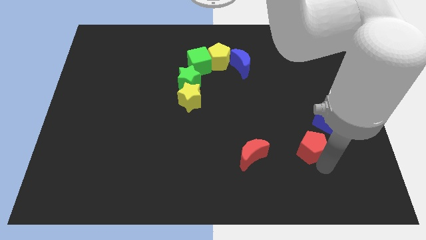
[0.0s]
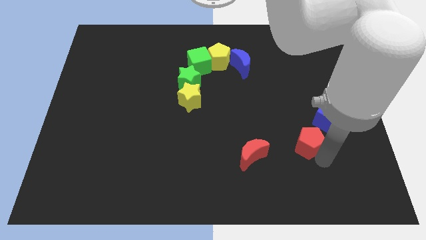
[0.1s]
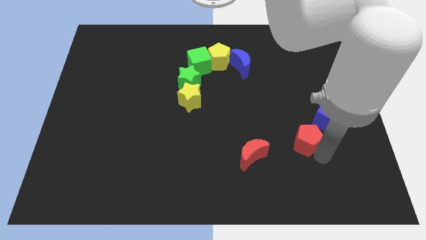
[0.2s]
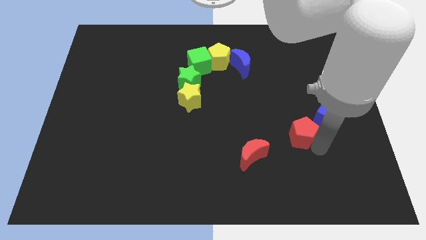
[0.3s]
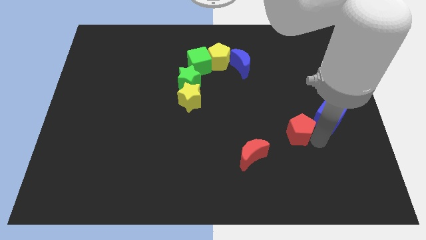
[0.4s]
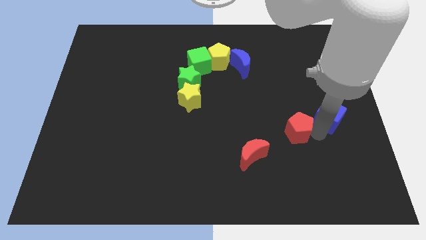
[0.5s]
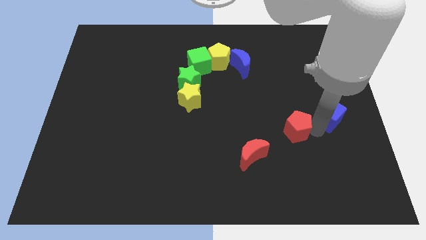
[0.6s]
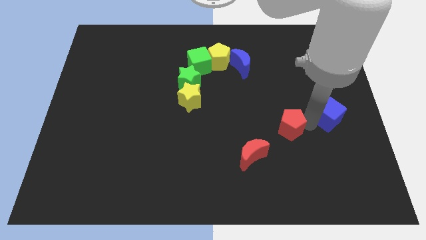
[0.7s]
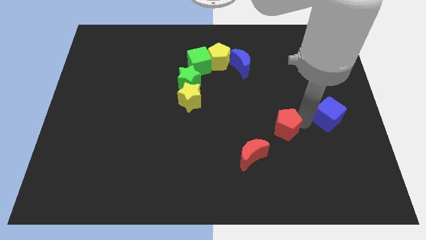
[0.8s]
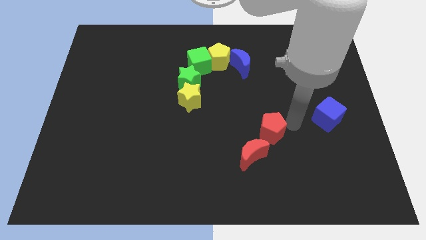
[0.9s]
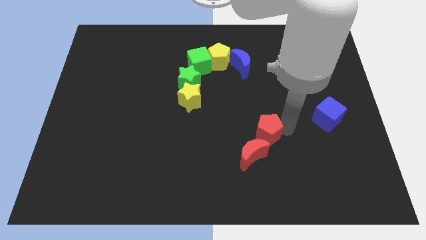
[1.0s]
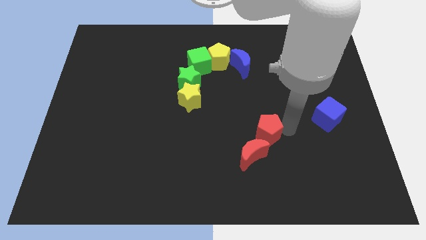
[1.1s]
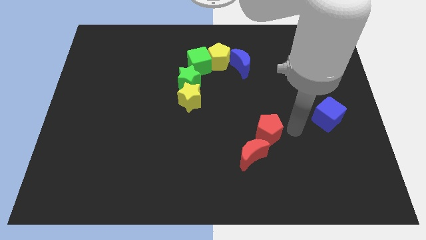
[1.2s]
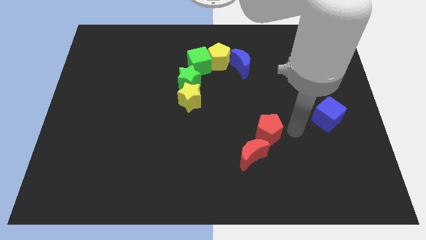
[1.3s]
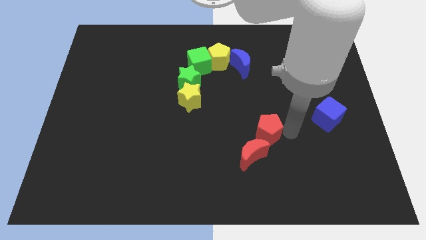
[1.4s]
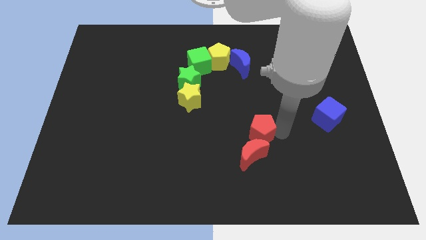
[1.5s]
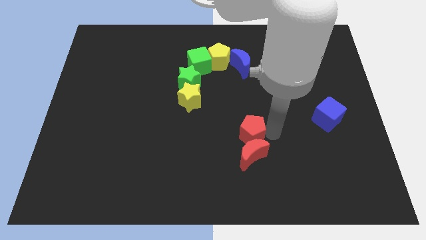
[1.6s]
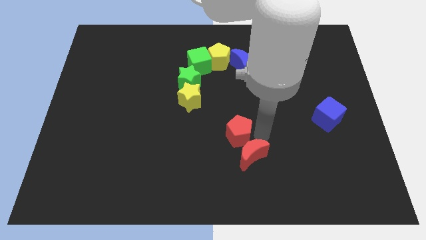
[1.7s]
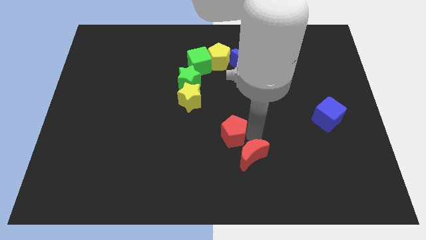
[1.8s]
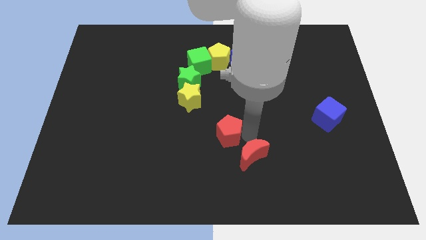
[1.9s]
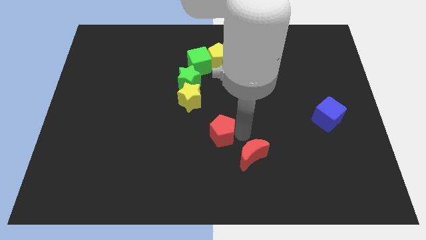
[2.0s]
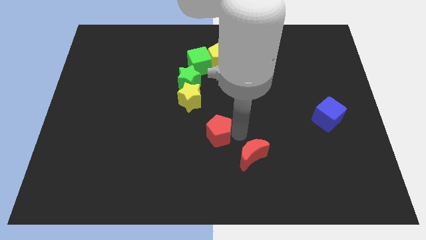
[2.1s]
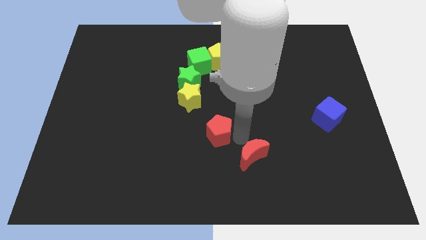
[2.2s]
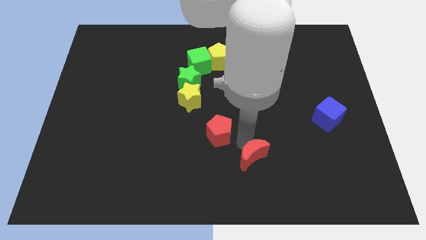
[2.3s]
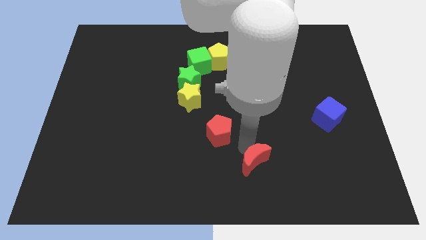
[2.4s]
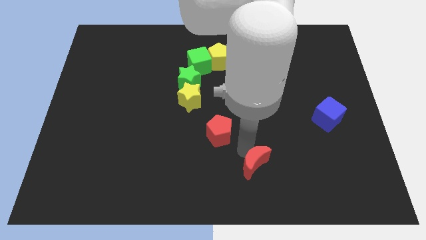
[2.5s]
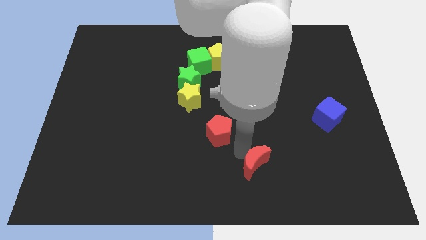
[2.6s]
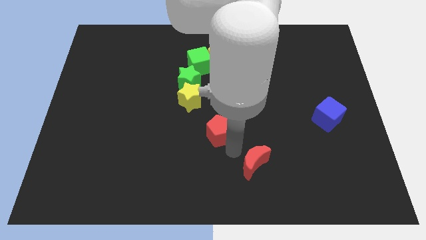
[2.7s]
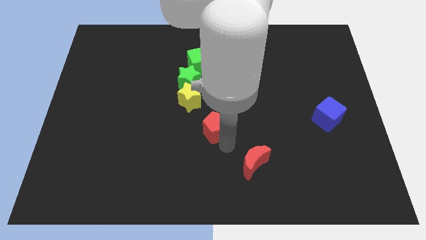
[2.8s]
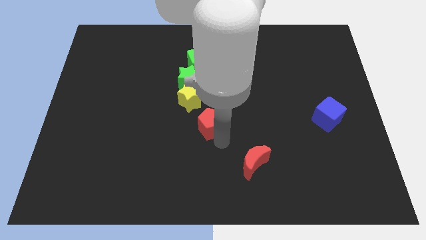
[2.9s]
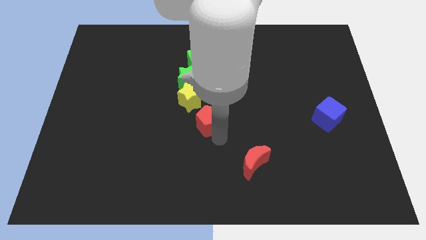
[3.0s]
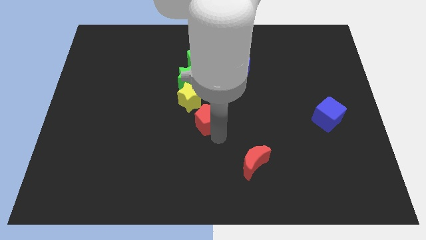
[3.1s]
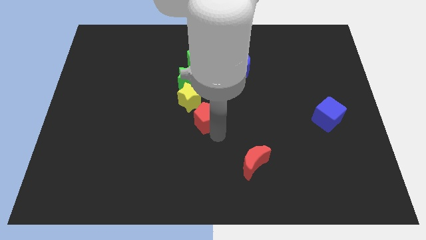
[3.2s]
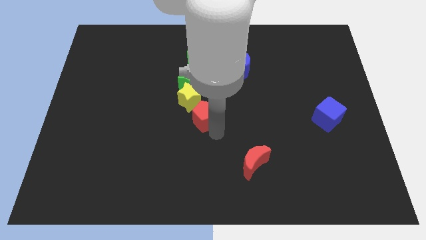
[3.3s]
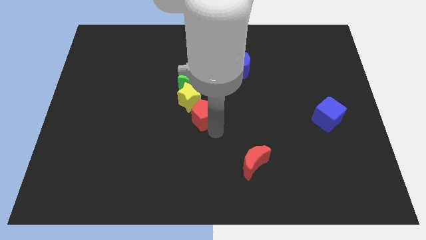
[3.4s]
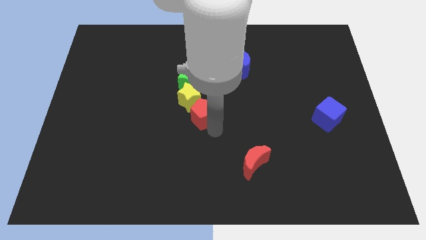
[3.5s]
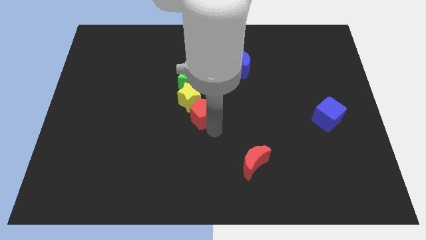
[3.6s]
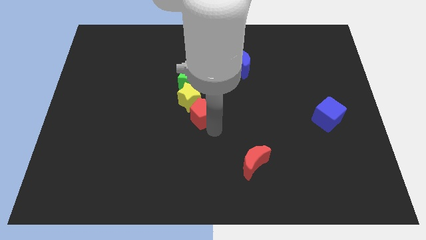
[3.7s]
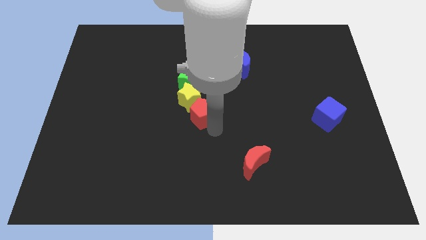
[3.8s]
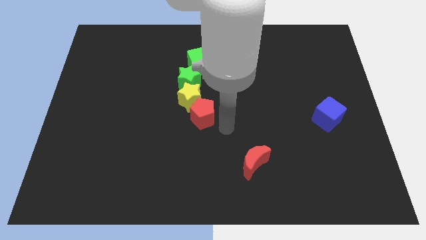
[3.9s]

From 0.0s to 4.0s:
push the red pentagon to the bottom of the yellow star

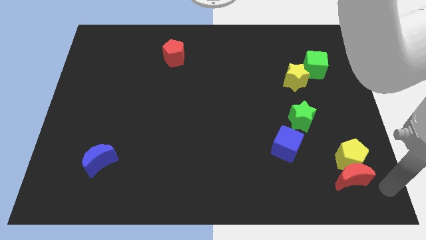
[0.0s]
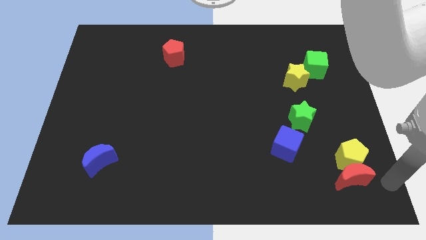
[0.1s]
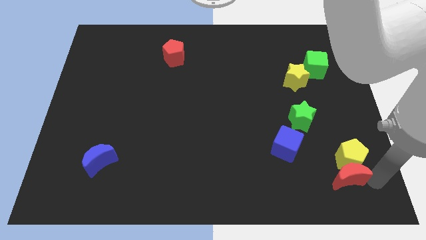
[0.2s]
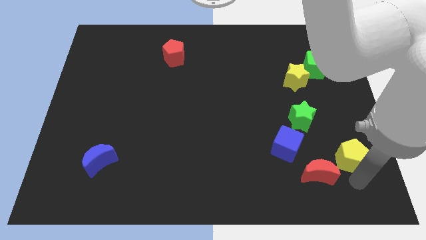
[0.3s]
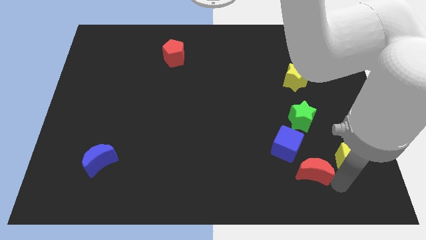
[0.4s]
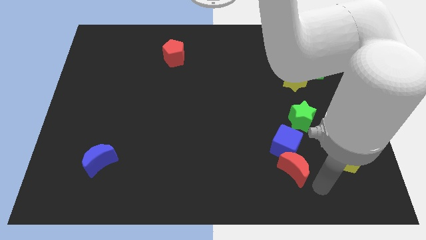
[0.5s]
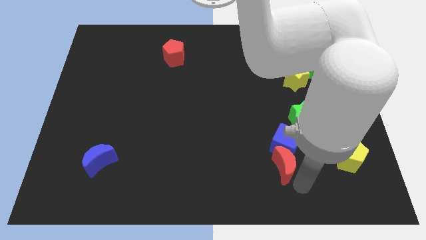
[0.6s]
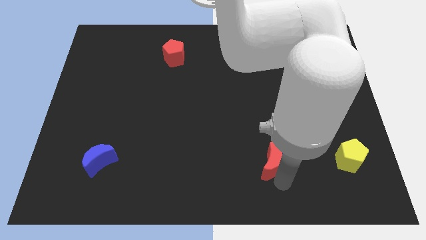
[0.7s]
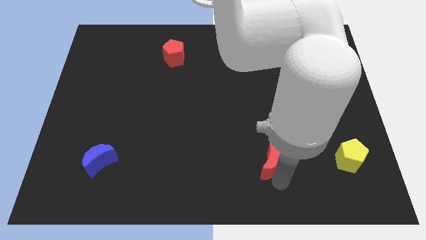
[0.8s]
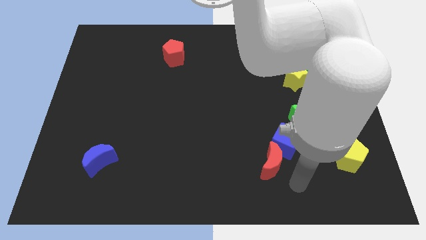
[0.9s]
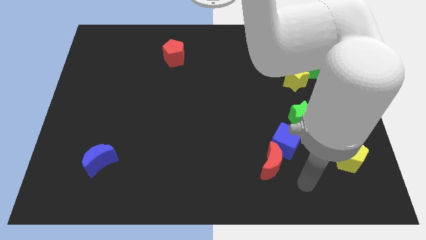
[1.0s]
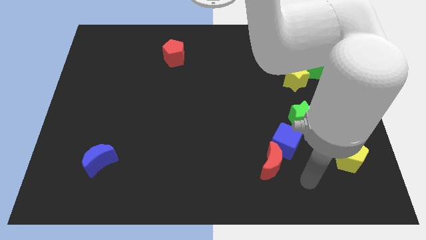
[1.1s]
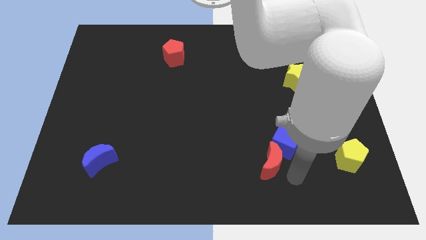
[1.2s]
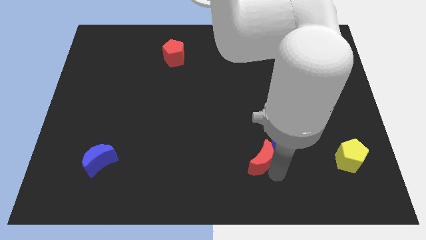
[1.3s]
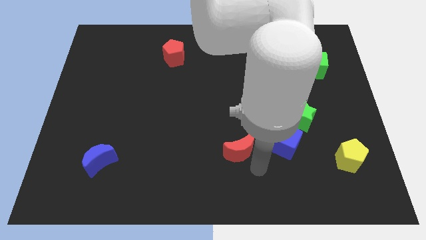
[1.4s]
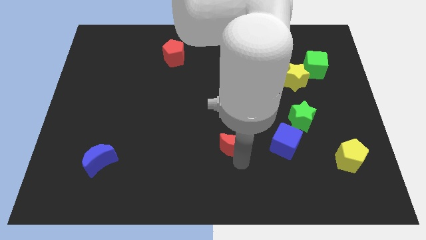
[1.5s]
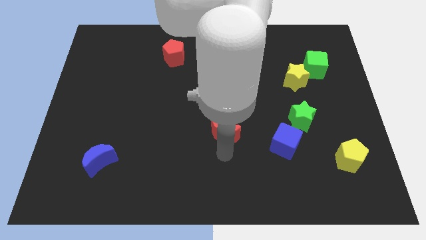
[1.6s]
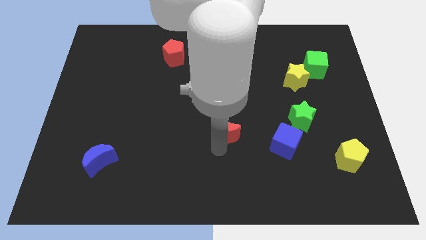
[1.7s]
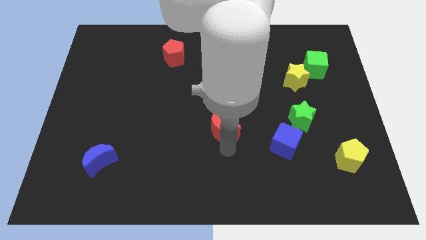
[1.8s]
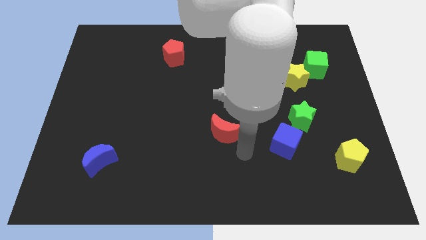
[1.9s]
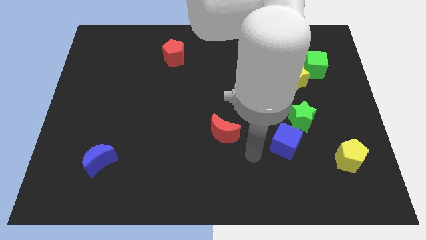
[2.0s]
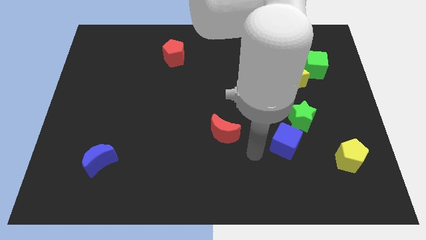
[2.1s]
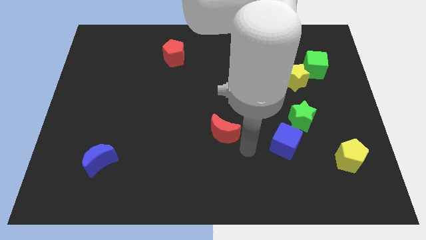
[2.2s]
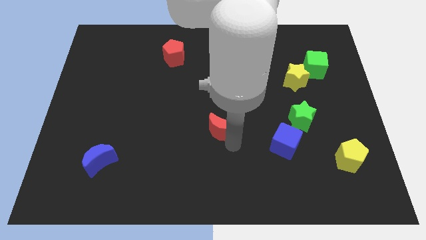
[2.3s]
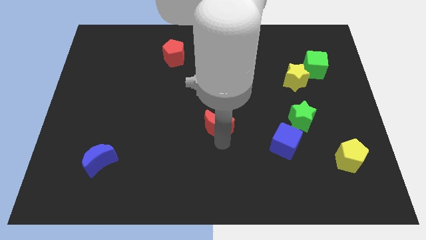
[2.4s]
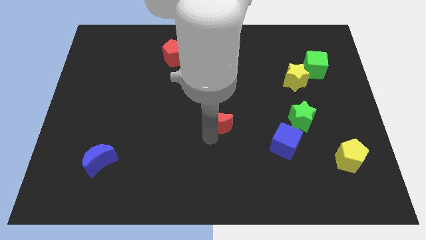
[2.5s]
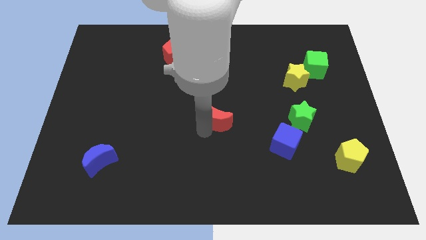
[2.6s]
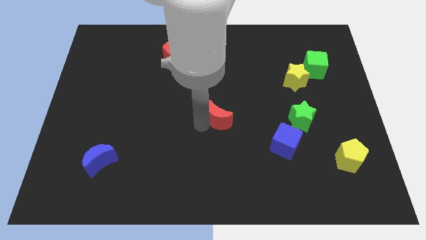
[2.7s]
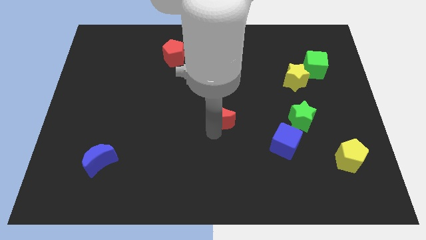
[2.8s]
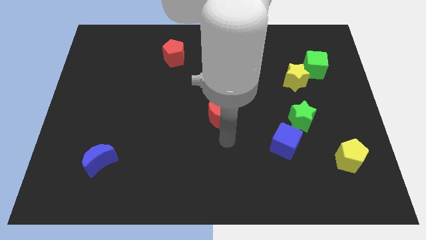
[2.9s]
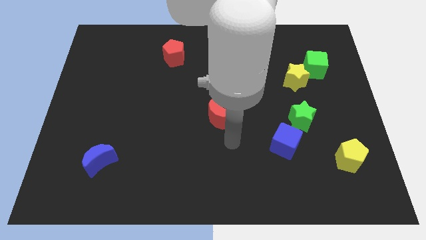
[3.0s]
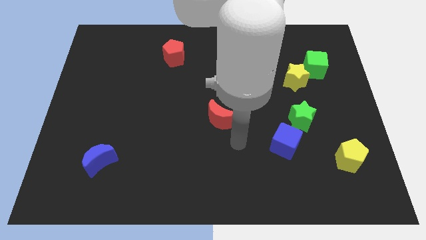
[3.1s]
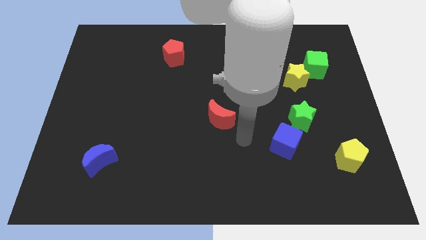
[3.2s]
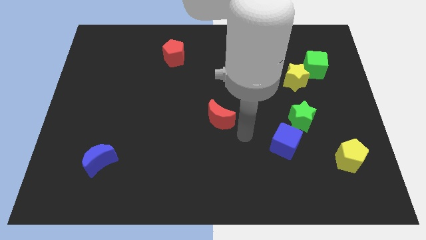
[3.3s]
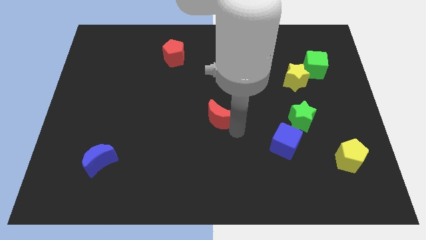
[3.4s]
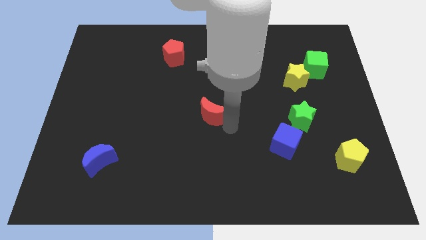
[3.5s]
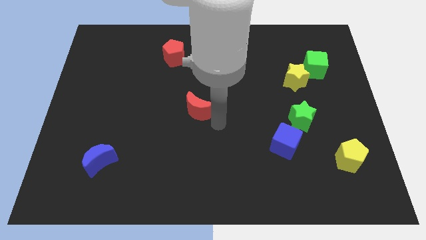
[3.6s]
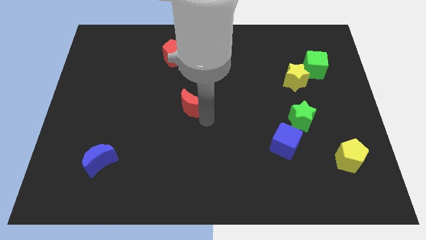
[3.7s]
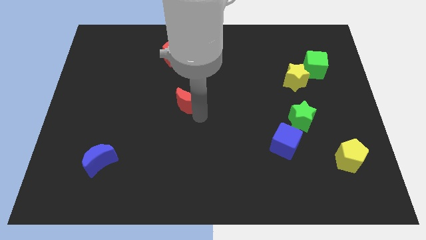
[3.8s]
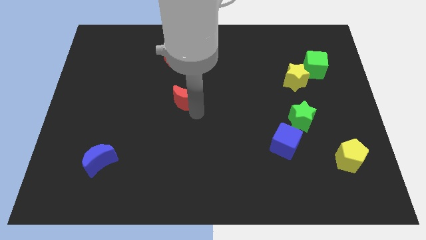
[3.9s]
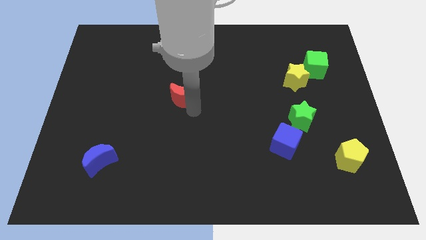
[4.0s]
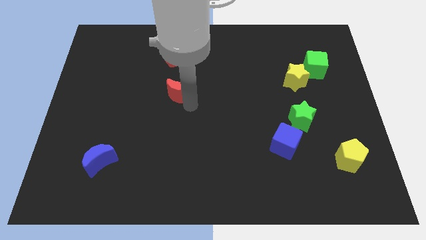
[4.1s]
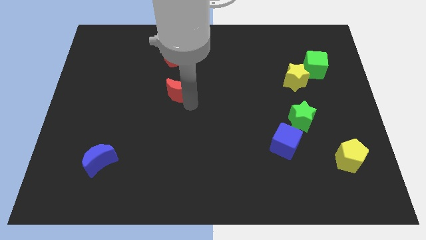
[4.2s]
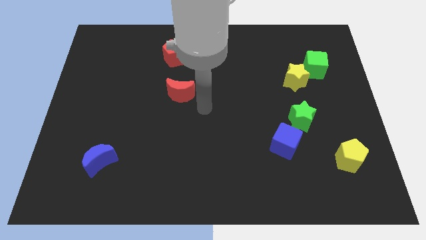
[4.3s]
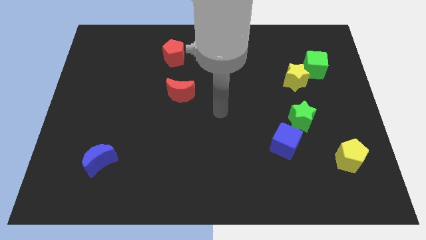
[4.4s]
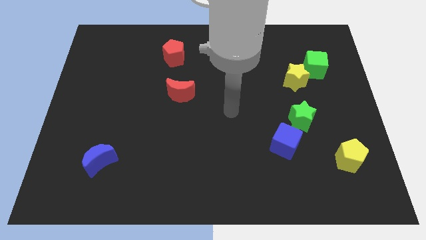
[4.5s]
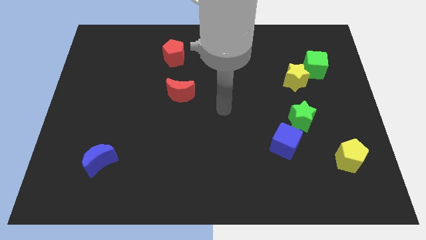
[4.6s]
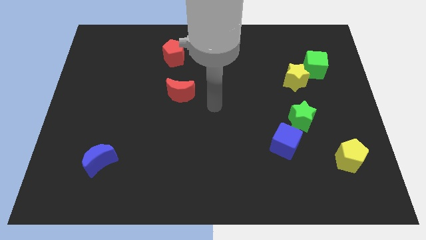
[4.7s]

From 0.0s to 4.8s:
push the red moon below the red pentagon

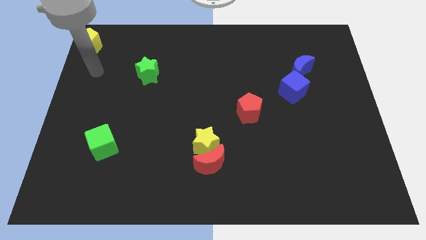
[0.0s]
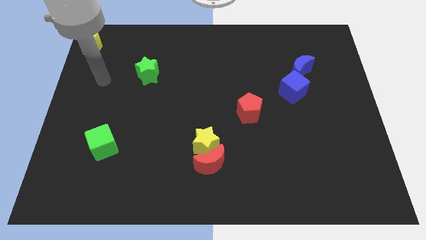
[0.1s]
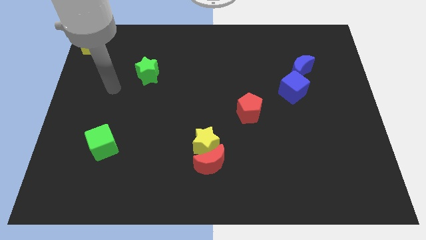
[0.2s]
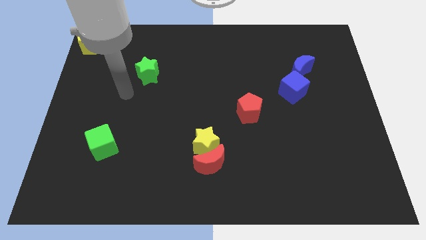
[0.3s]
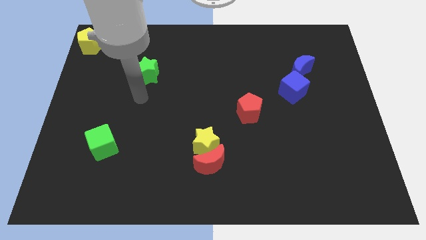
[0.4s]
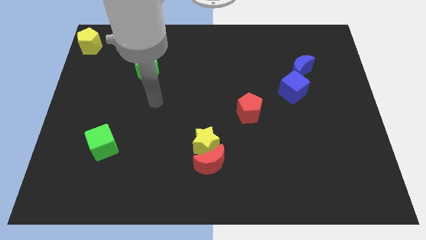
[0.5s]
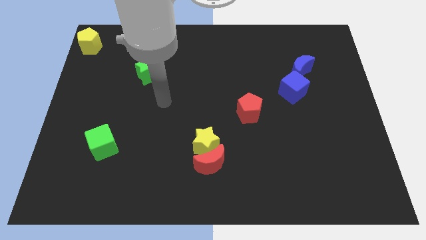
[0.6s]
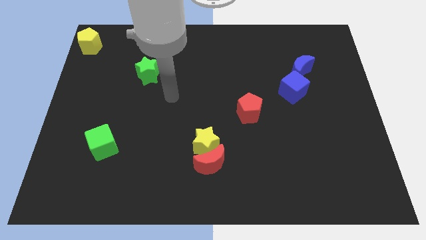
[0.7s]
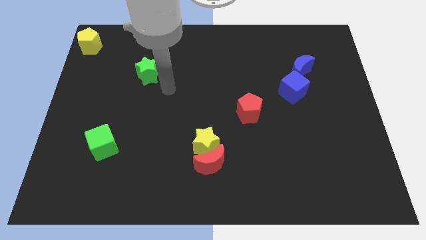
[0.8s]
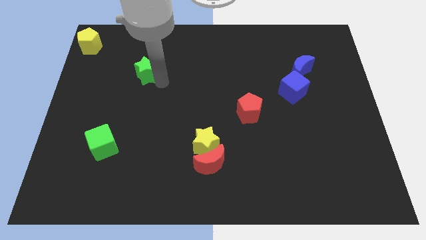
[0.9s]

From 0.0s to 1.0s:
place your arm at the bottom right side of green star
